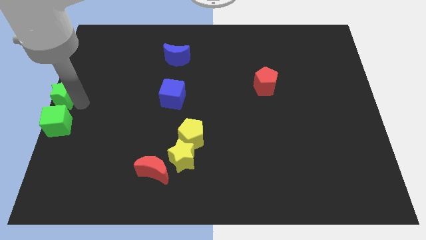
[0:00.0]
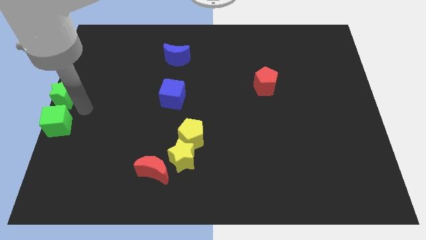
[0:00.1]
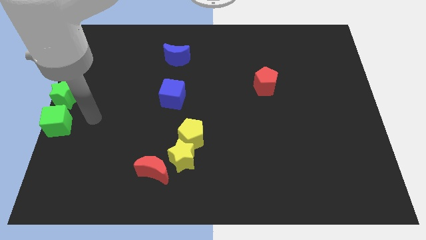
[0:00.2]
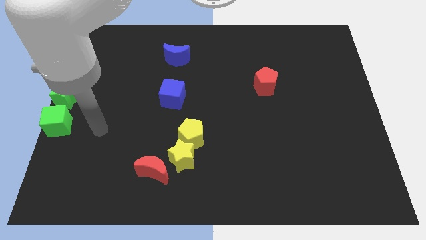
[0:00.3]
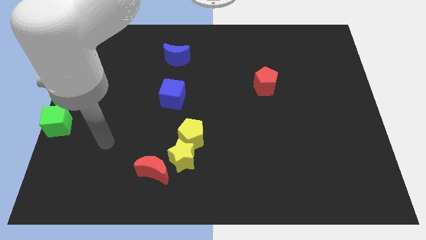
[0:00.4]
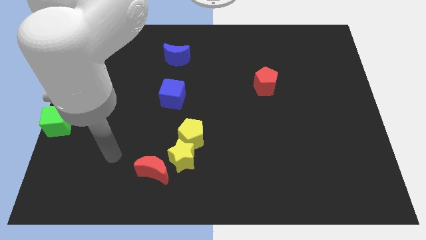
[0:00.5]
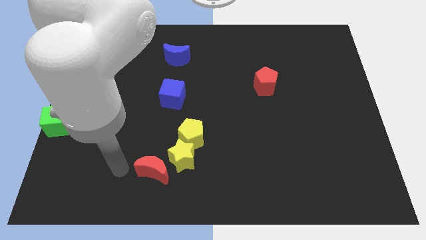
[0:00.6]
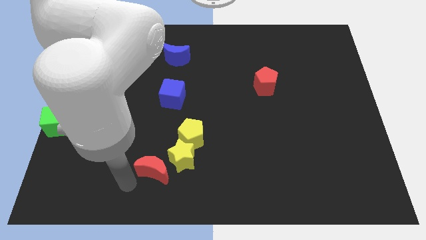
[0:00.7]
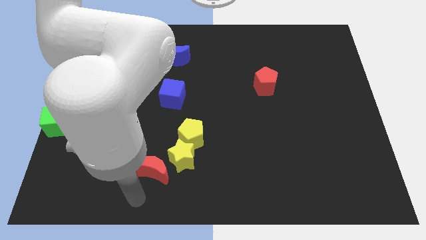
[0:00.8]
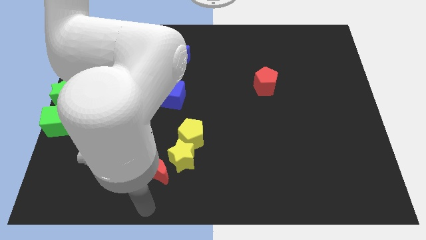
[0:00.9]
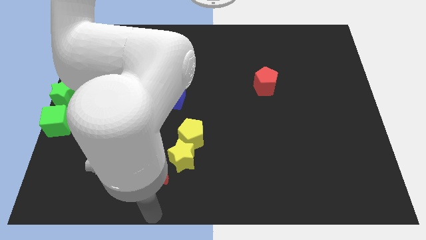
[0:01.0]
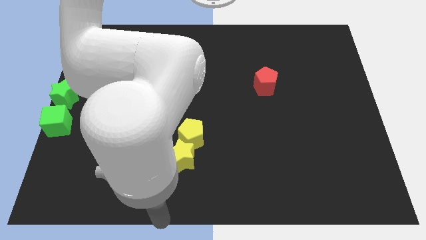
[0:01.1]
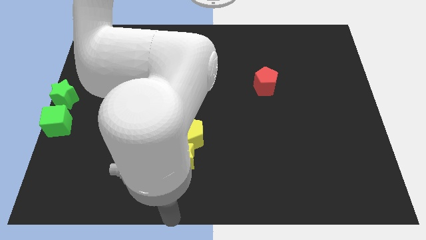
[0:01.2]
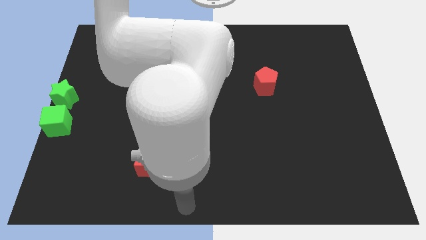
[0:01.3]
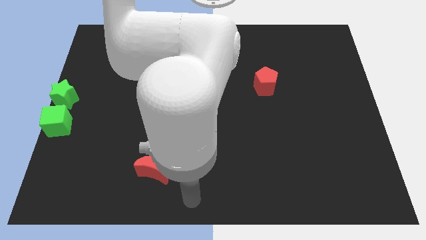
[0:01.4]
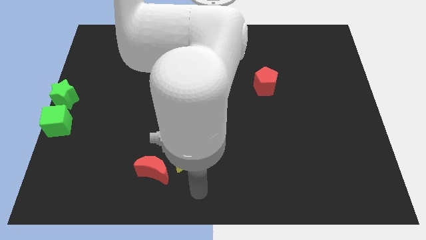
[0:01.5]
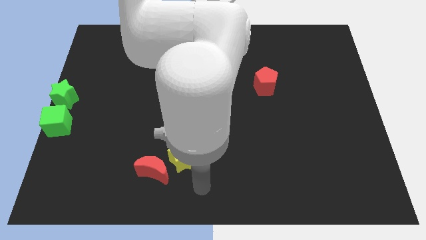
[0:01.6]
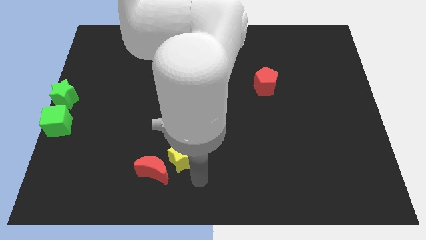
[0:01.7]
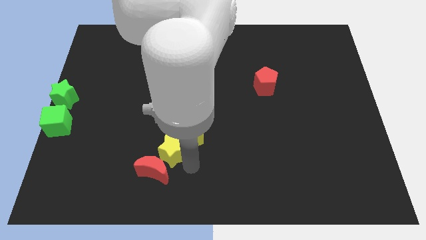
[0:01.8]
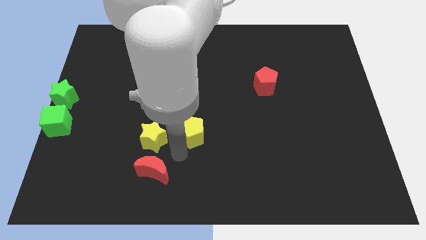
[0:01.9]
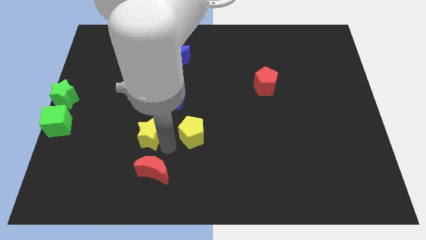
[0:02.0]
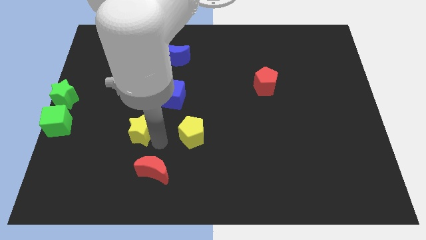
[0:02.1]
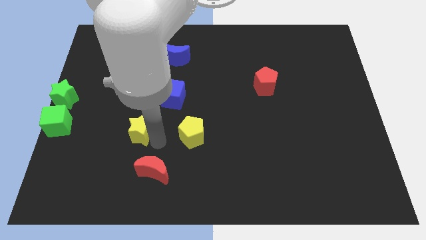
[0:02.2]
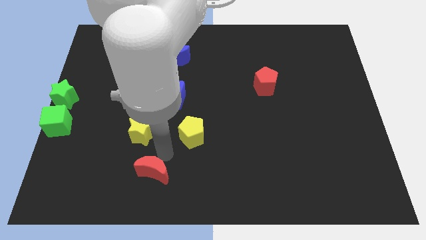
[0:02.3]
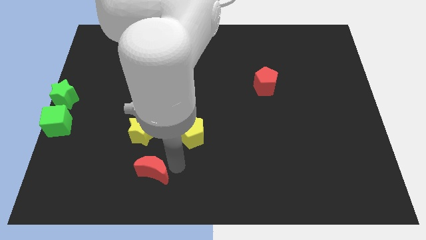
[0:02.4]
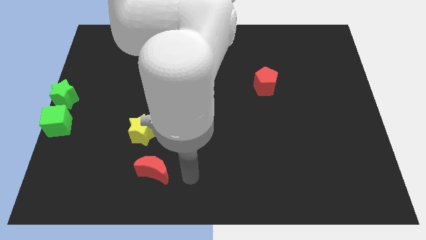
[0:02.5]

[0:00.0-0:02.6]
move the yellow star to the left of the yellow pentagon

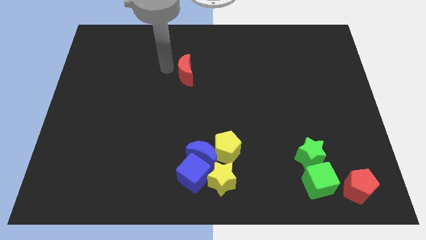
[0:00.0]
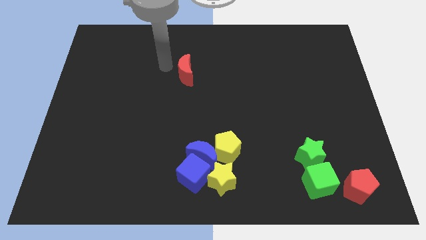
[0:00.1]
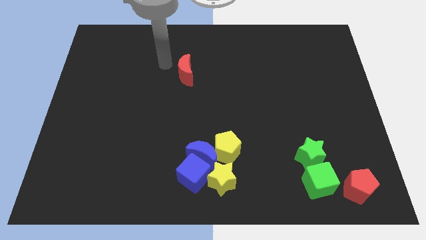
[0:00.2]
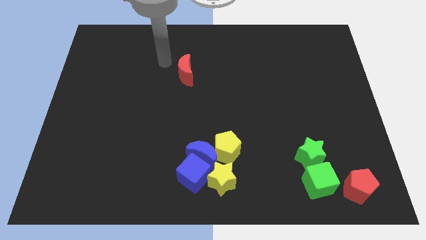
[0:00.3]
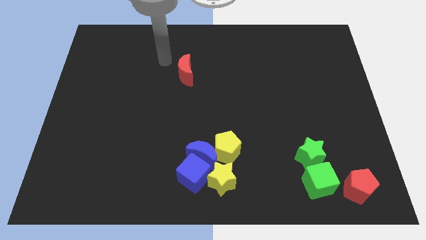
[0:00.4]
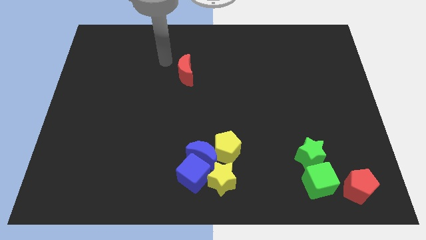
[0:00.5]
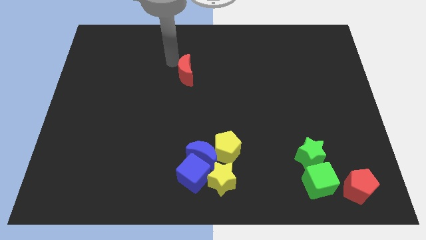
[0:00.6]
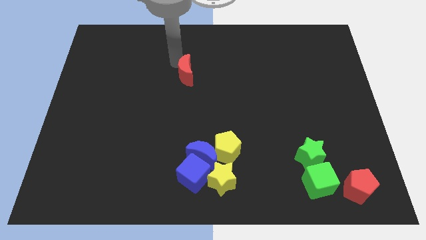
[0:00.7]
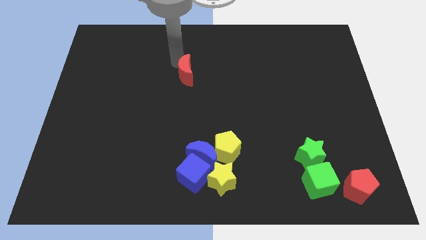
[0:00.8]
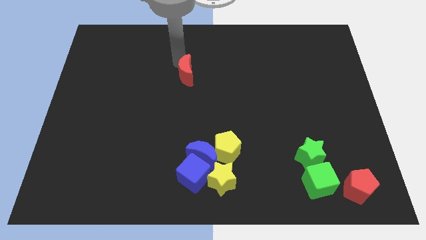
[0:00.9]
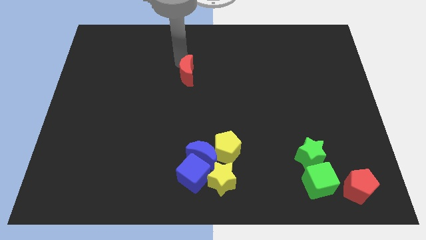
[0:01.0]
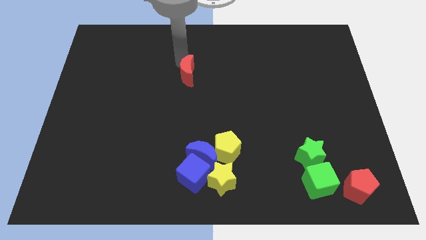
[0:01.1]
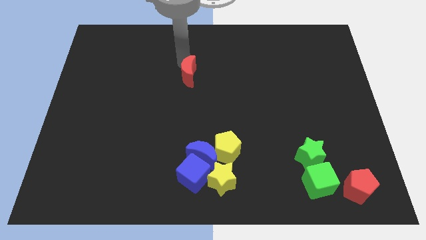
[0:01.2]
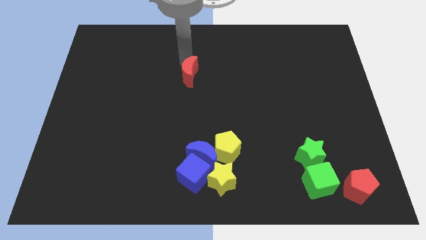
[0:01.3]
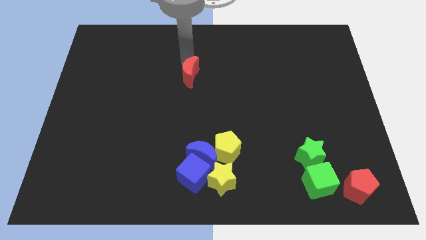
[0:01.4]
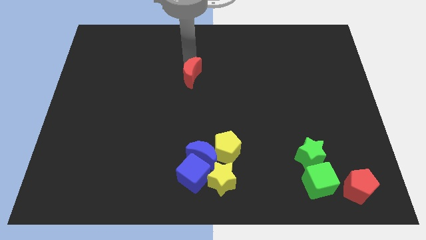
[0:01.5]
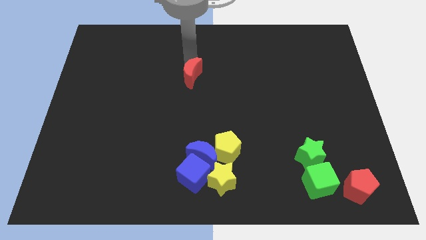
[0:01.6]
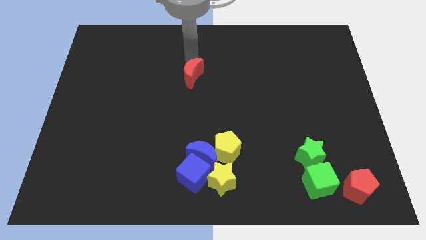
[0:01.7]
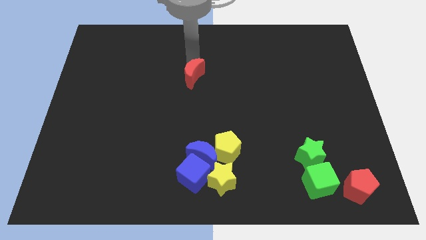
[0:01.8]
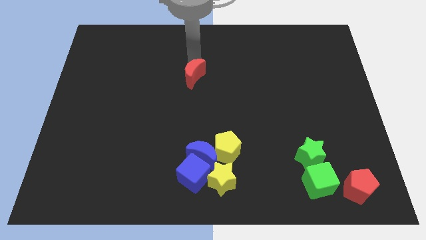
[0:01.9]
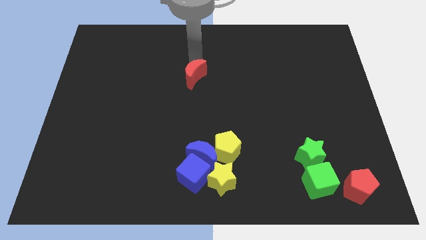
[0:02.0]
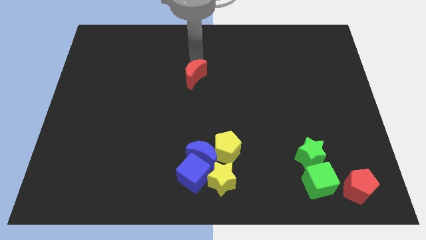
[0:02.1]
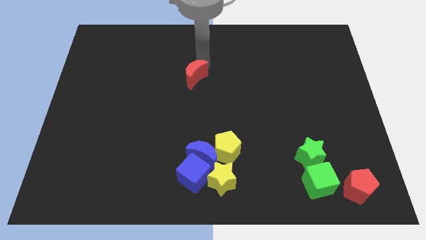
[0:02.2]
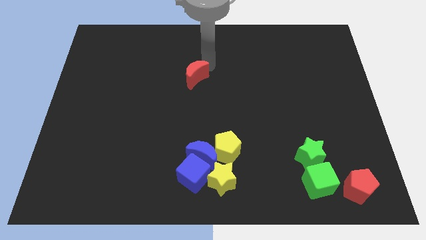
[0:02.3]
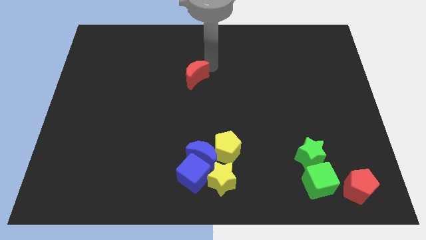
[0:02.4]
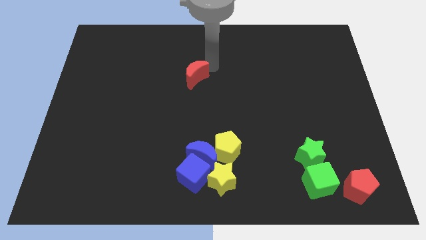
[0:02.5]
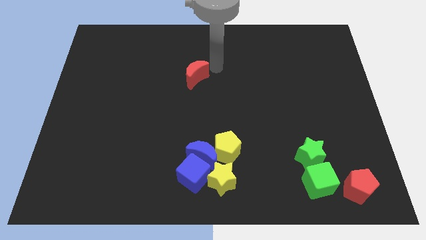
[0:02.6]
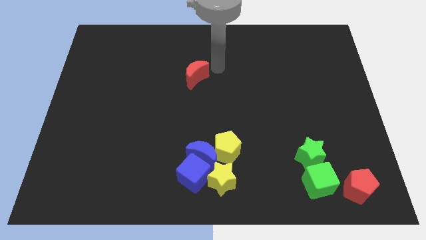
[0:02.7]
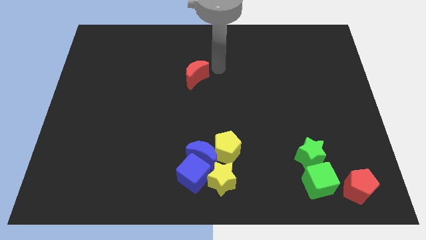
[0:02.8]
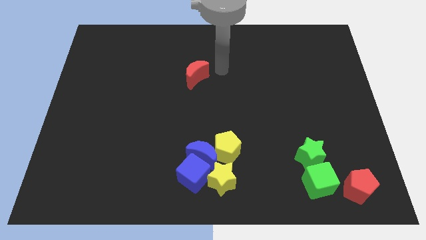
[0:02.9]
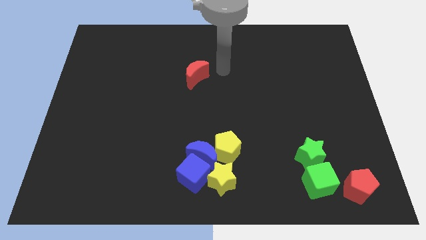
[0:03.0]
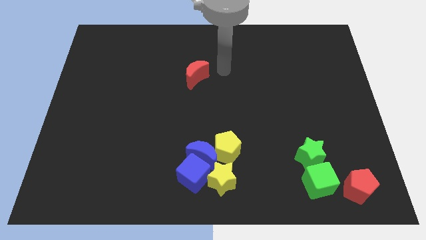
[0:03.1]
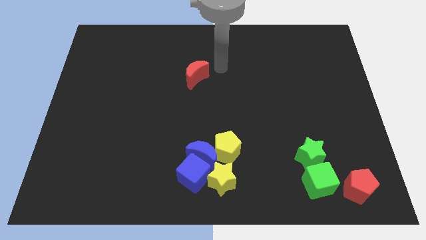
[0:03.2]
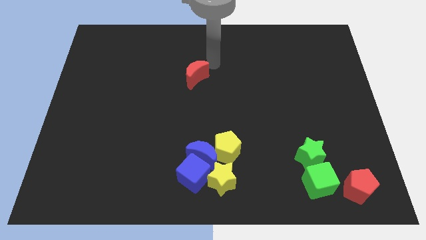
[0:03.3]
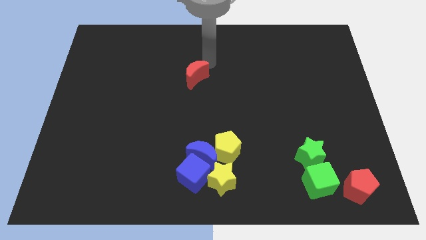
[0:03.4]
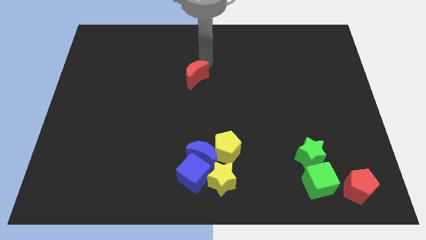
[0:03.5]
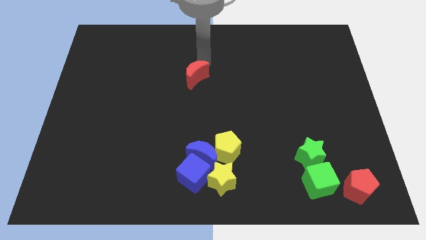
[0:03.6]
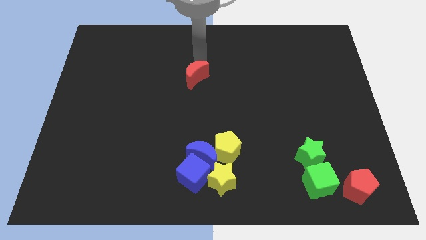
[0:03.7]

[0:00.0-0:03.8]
slightly move the red crescent to the down

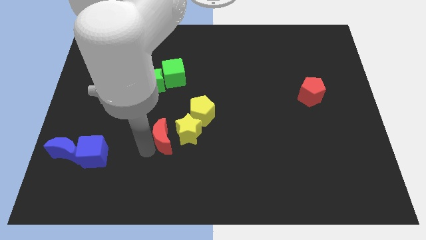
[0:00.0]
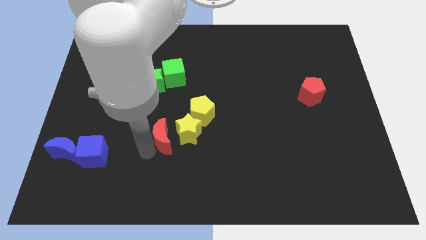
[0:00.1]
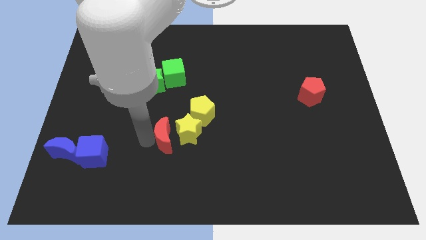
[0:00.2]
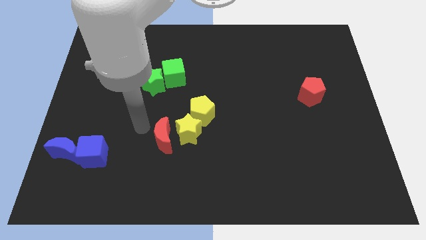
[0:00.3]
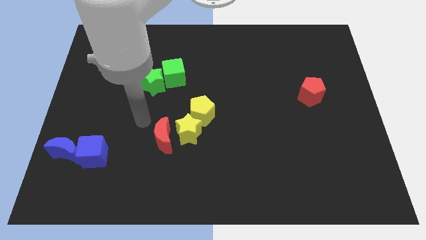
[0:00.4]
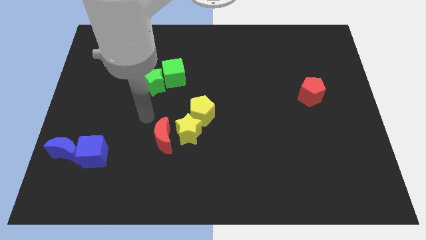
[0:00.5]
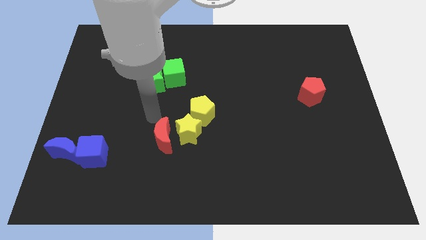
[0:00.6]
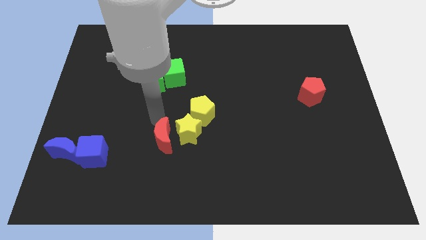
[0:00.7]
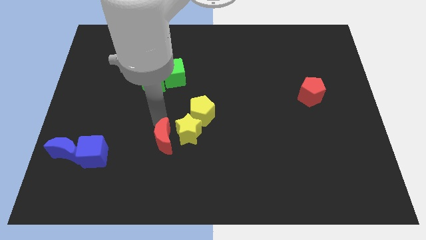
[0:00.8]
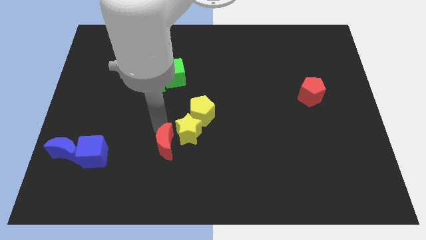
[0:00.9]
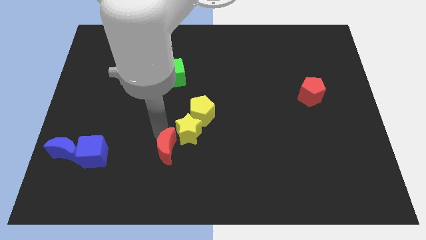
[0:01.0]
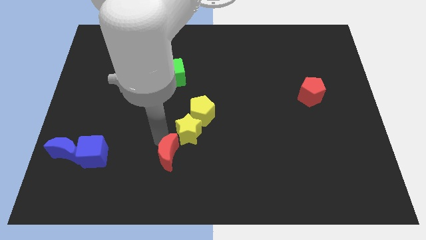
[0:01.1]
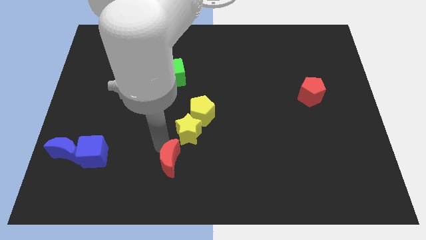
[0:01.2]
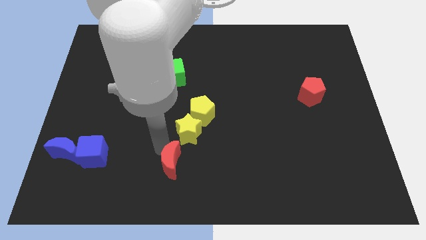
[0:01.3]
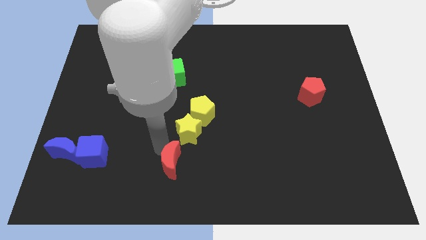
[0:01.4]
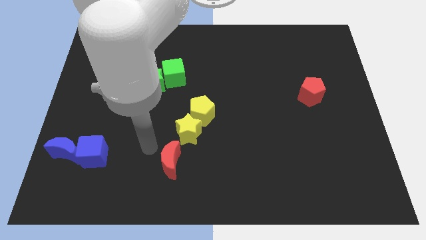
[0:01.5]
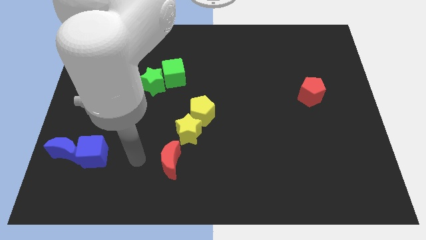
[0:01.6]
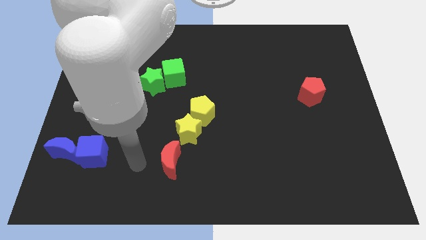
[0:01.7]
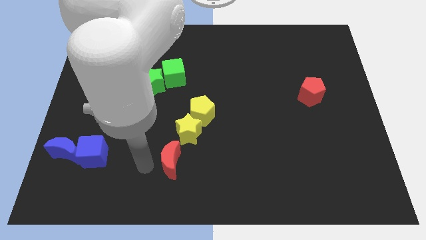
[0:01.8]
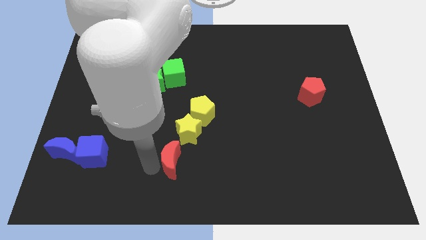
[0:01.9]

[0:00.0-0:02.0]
place the red moon towards the bottom of the yellow star

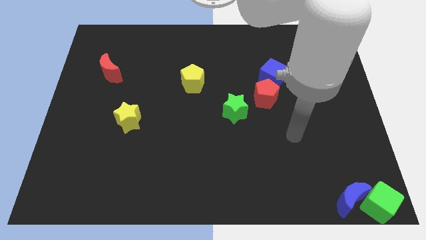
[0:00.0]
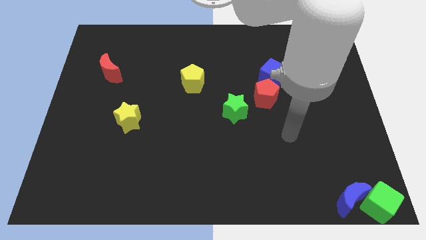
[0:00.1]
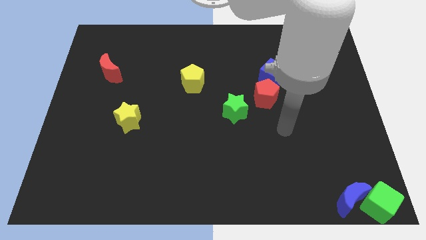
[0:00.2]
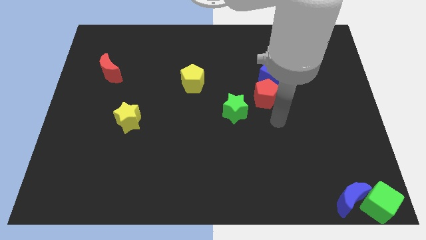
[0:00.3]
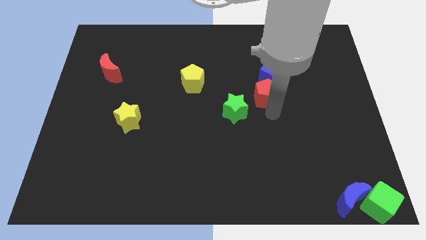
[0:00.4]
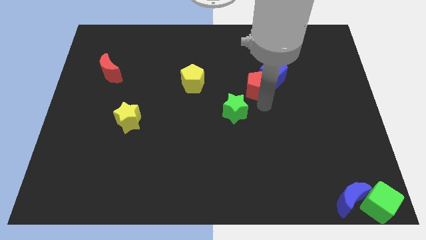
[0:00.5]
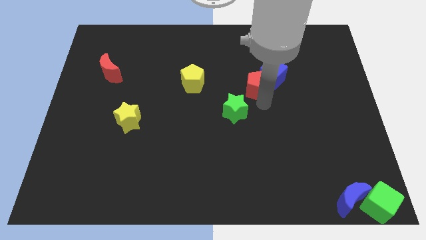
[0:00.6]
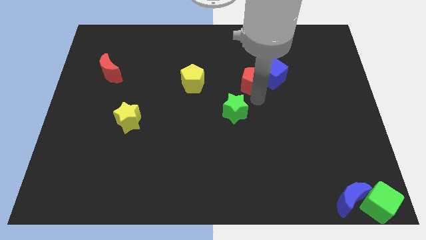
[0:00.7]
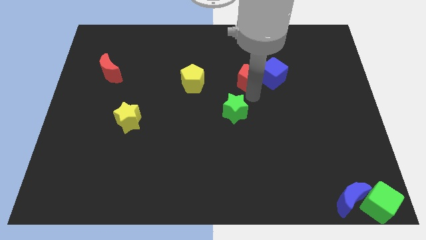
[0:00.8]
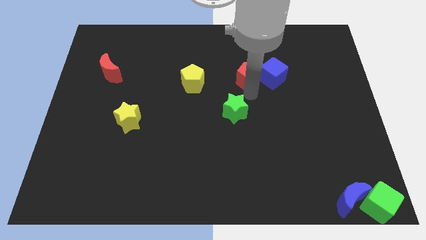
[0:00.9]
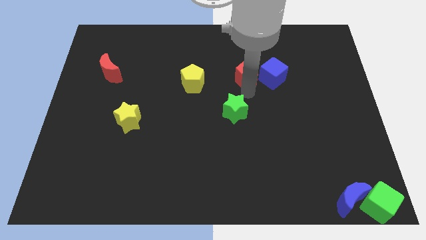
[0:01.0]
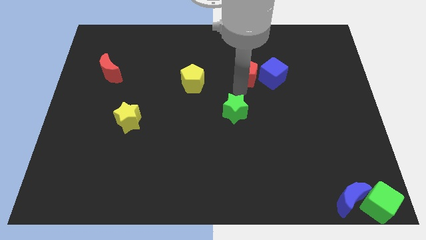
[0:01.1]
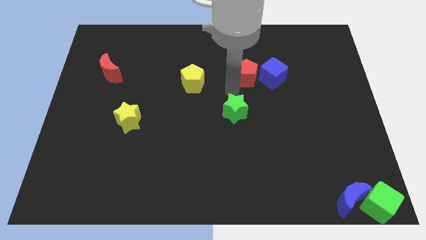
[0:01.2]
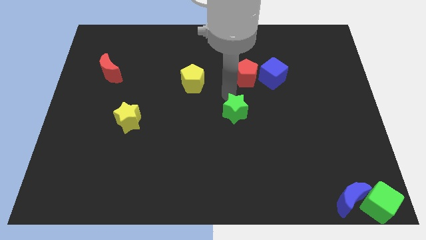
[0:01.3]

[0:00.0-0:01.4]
place red pentagon to the left of blue cube
